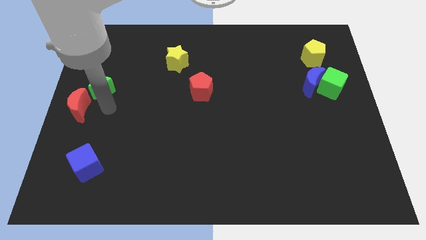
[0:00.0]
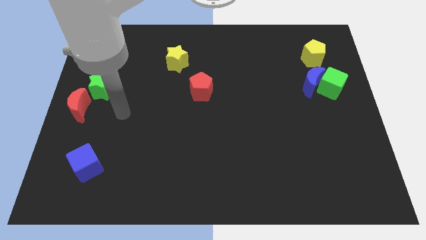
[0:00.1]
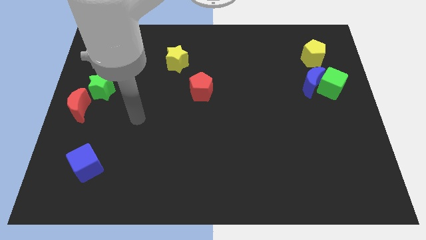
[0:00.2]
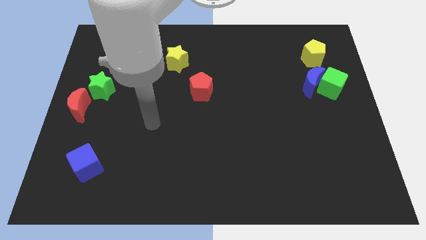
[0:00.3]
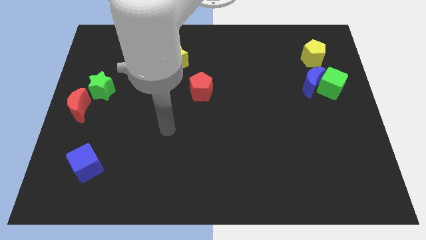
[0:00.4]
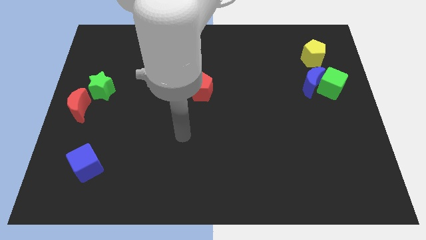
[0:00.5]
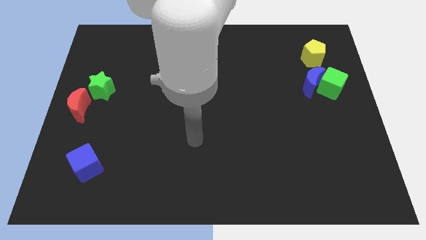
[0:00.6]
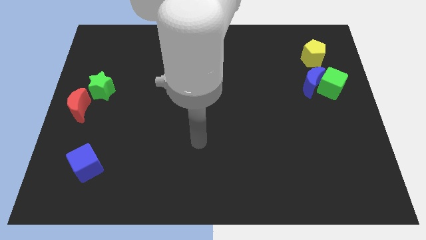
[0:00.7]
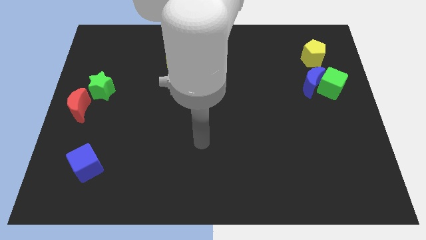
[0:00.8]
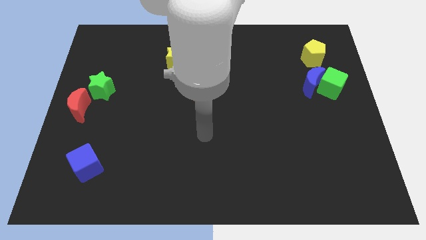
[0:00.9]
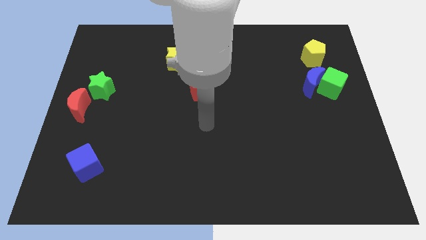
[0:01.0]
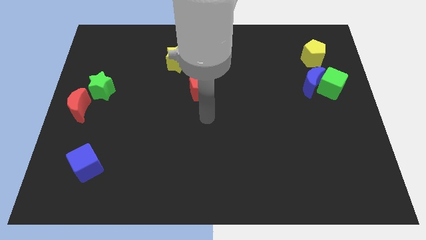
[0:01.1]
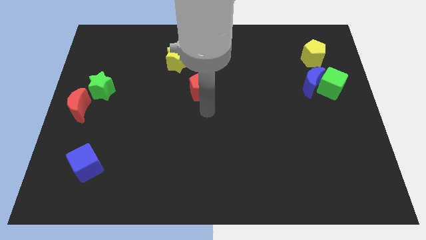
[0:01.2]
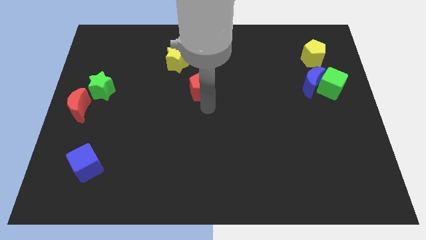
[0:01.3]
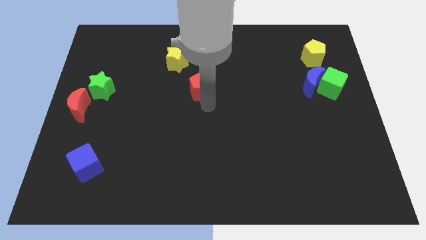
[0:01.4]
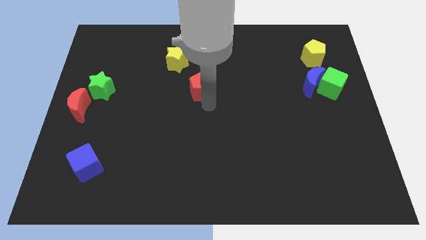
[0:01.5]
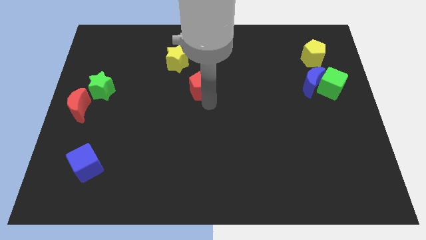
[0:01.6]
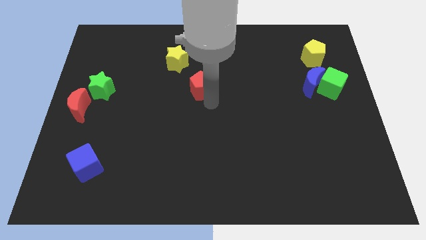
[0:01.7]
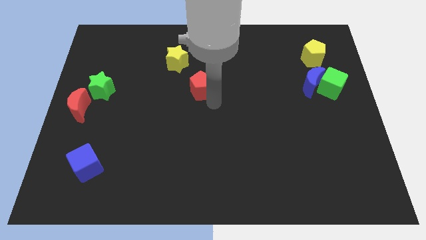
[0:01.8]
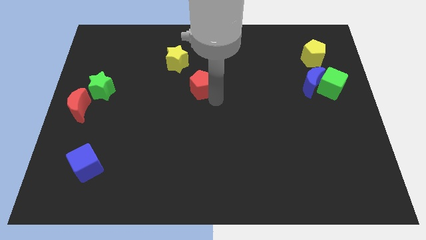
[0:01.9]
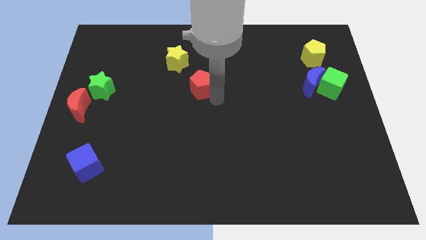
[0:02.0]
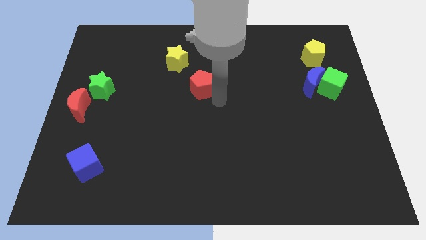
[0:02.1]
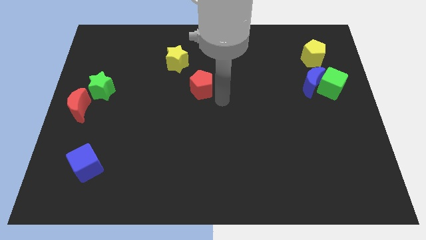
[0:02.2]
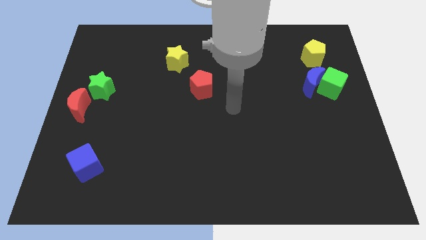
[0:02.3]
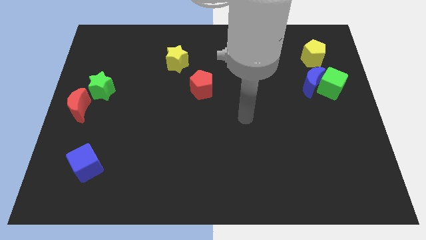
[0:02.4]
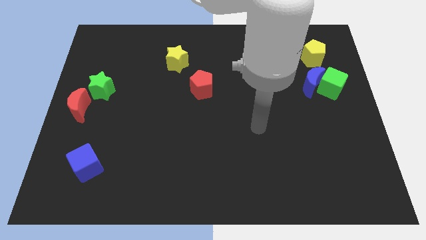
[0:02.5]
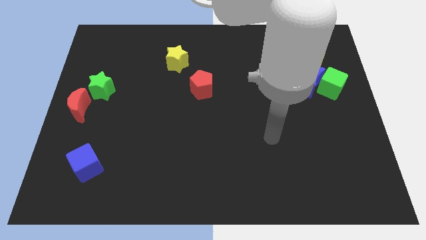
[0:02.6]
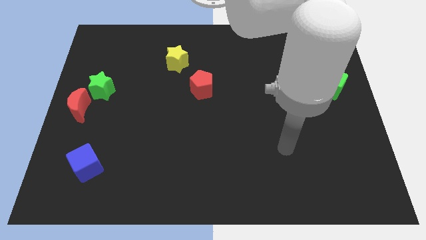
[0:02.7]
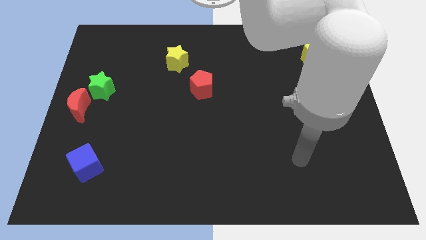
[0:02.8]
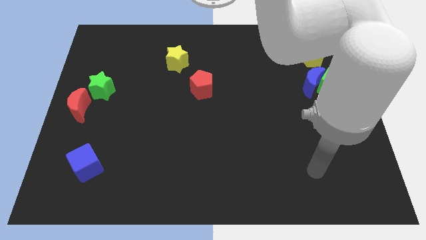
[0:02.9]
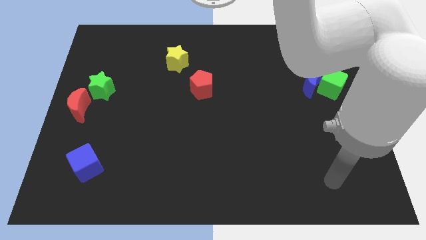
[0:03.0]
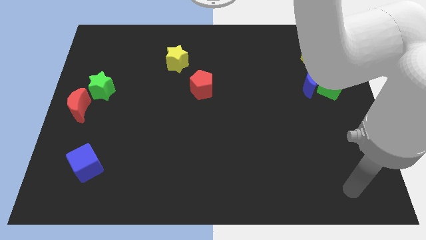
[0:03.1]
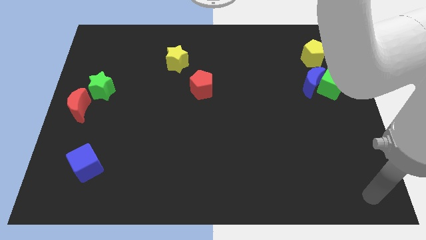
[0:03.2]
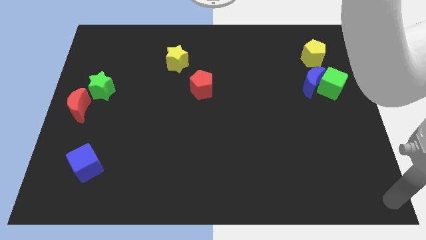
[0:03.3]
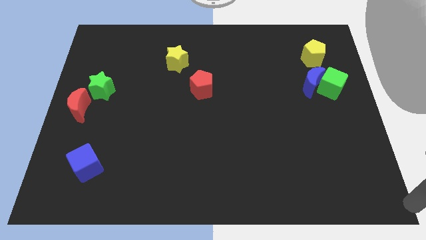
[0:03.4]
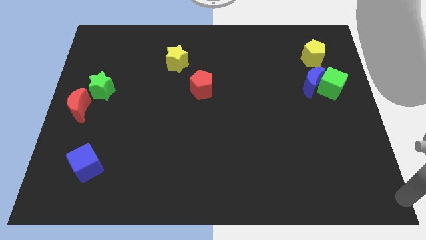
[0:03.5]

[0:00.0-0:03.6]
move your hand to the bottom right corner of the board

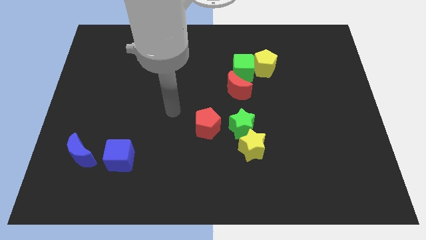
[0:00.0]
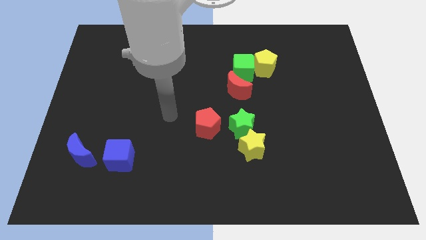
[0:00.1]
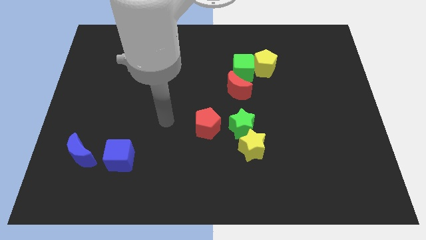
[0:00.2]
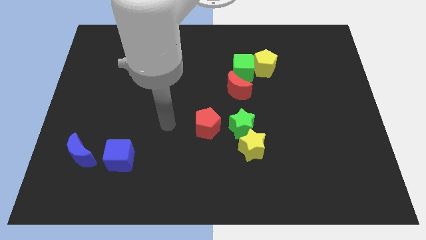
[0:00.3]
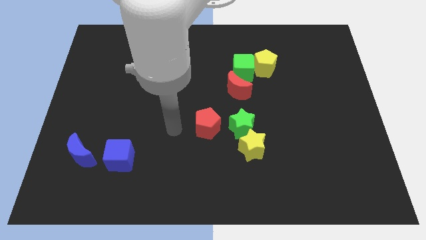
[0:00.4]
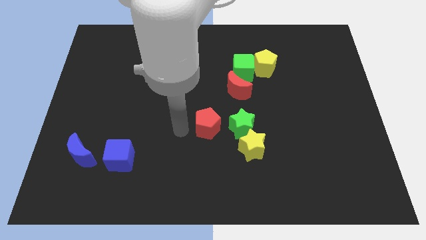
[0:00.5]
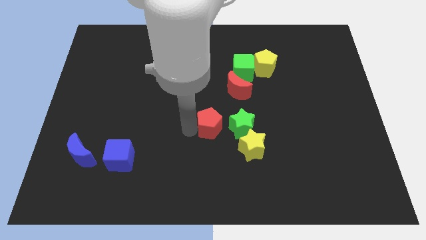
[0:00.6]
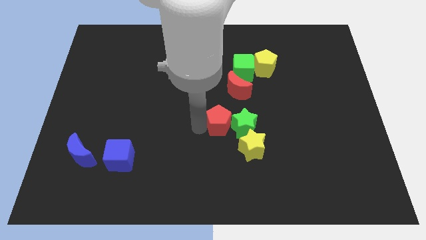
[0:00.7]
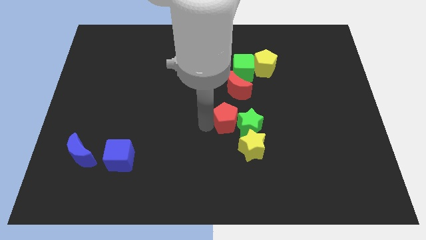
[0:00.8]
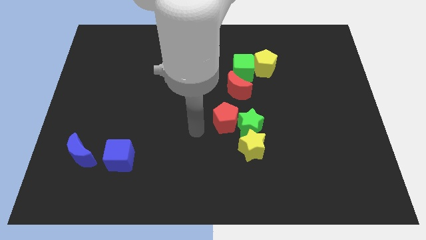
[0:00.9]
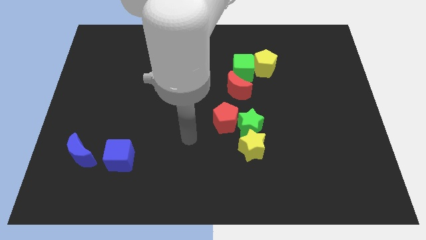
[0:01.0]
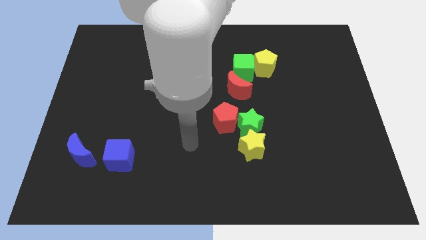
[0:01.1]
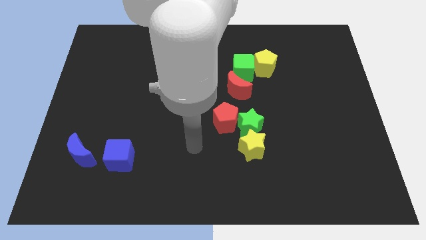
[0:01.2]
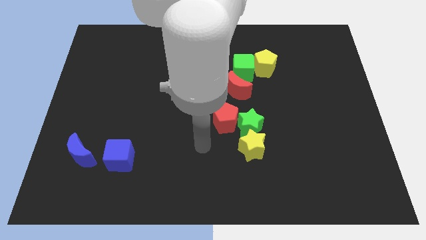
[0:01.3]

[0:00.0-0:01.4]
push the red pentagon into the green star

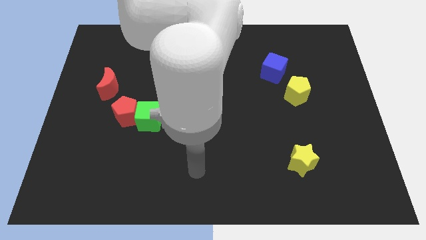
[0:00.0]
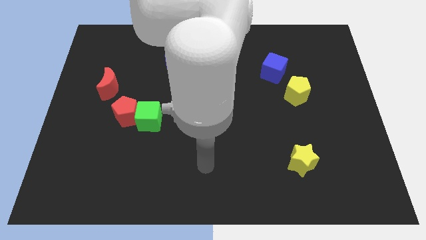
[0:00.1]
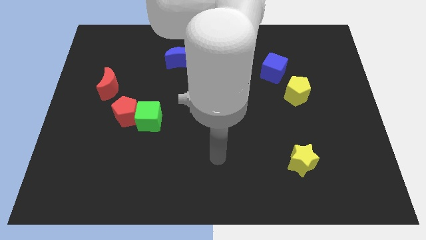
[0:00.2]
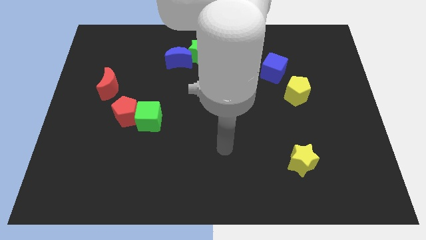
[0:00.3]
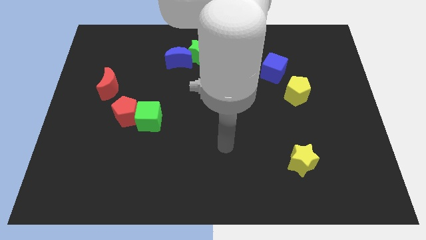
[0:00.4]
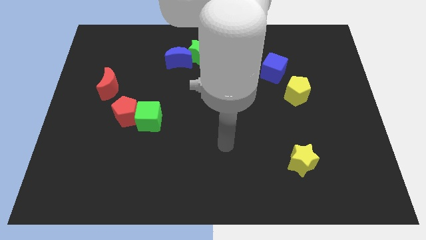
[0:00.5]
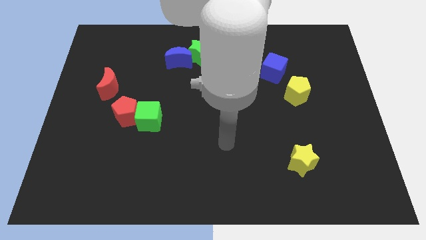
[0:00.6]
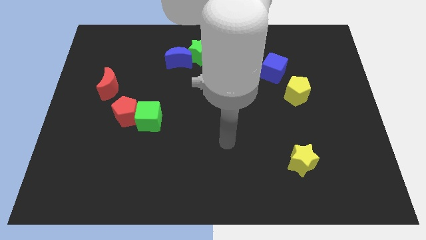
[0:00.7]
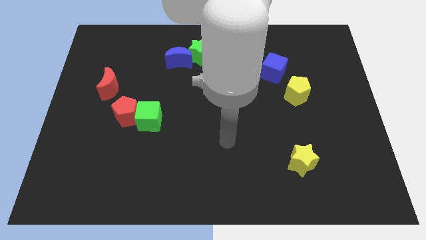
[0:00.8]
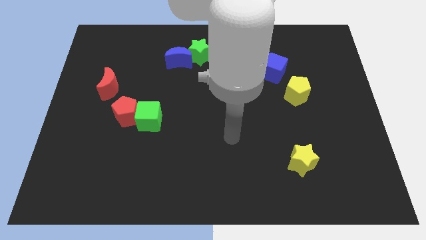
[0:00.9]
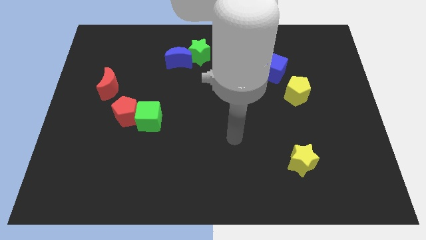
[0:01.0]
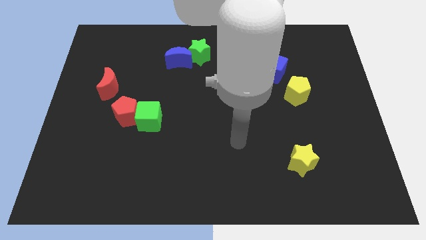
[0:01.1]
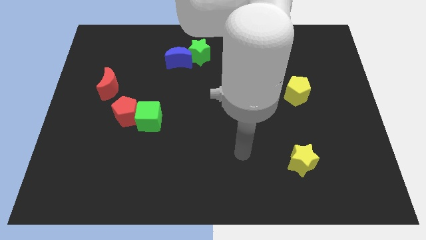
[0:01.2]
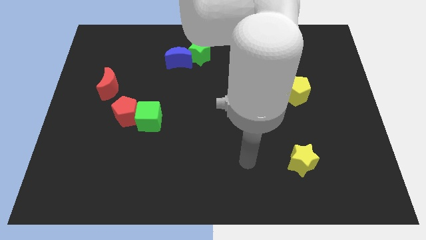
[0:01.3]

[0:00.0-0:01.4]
move your hand to the left side of the yellow star

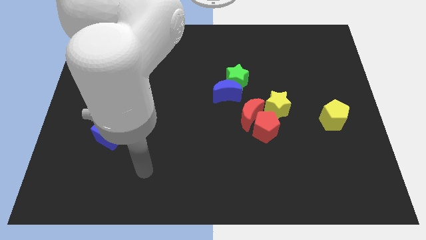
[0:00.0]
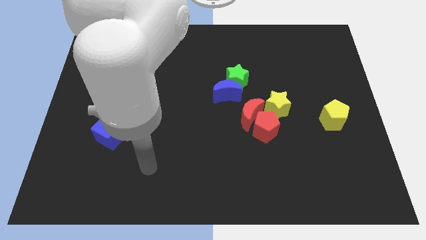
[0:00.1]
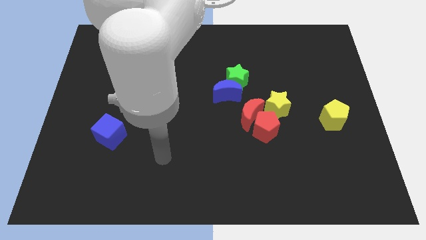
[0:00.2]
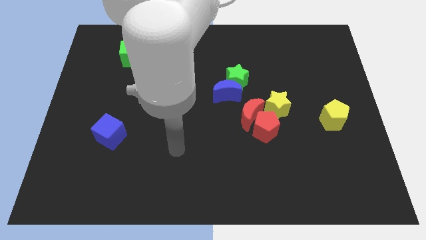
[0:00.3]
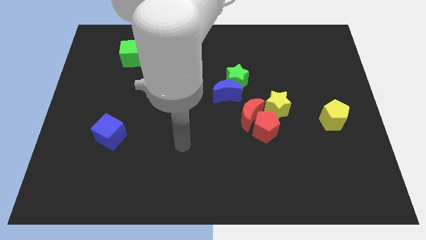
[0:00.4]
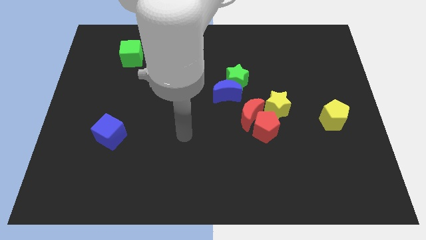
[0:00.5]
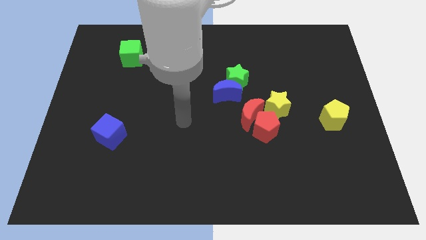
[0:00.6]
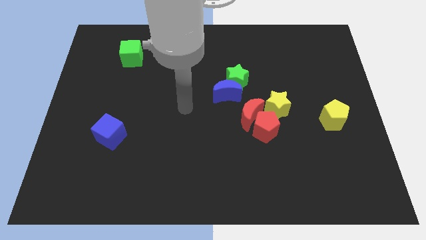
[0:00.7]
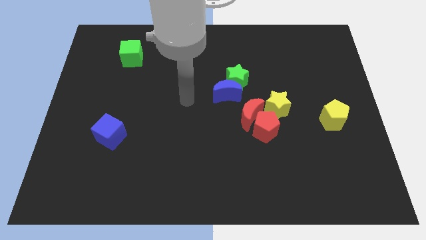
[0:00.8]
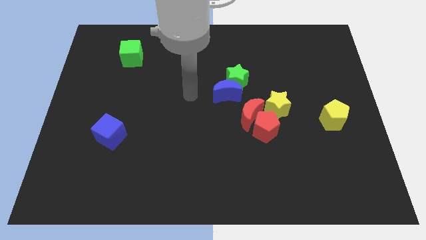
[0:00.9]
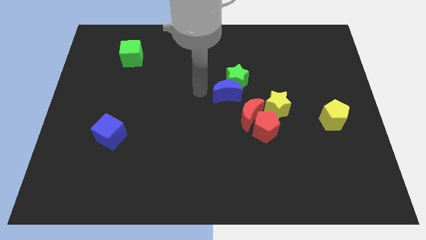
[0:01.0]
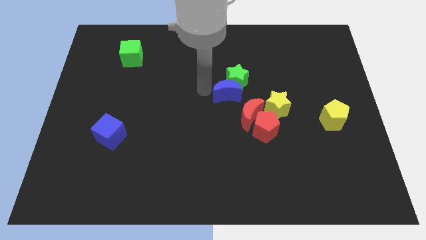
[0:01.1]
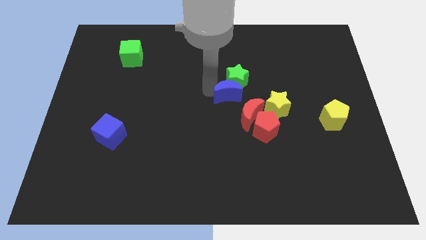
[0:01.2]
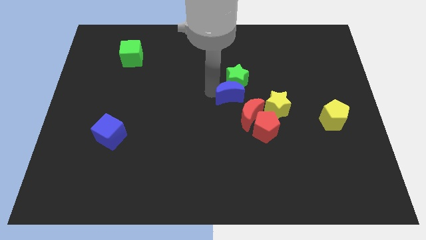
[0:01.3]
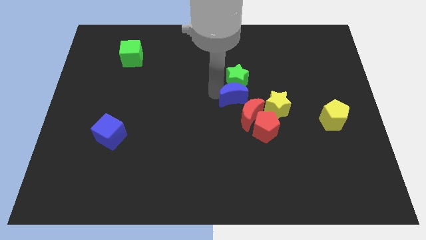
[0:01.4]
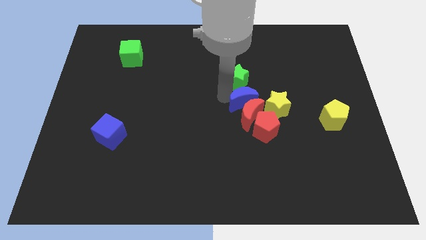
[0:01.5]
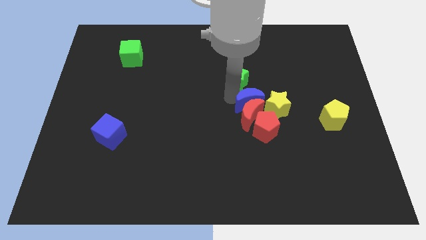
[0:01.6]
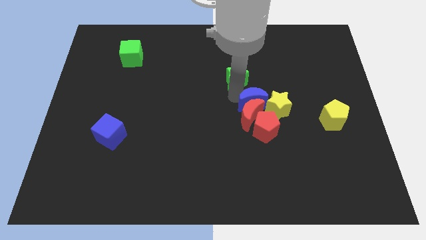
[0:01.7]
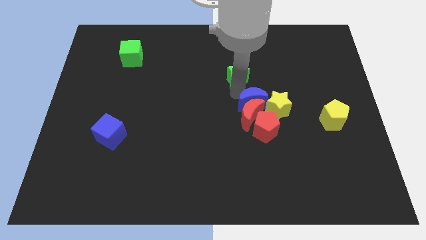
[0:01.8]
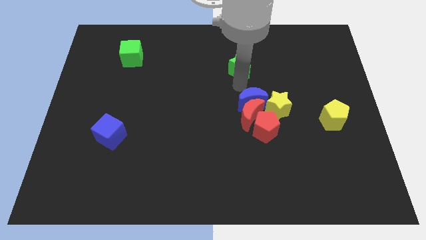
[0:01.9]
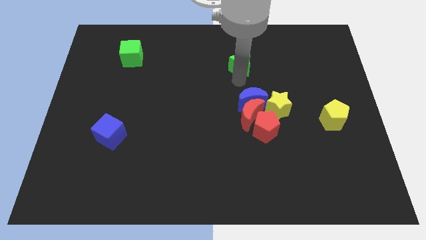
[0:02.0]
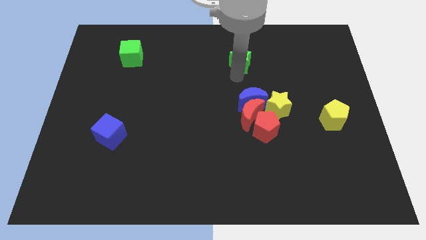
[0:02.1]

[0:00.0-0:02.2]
push the blue moon close to the red moon

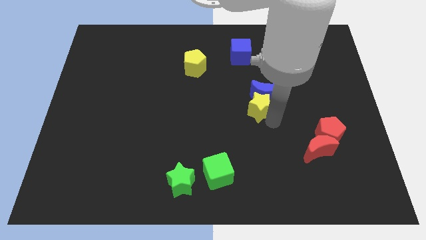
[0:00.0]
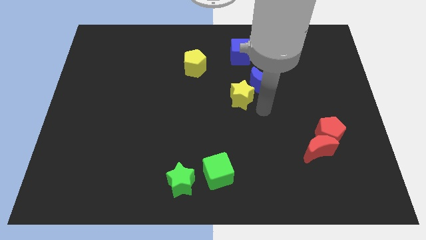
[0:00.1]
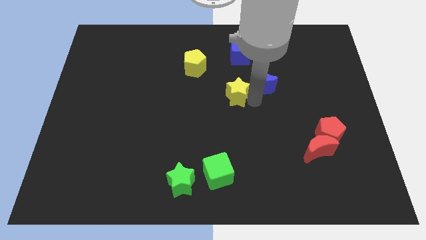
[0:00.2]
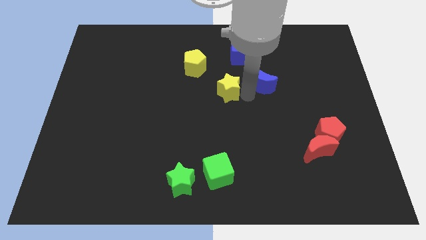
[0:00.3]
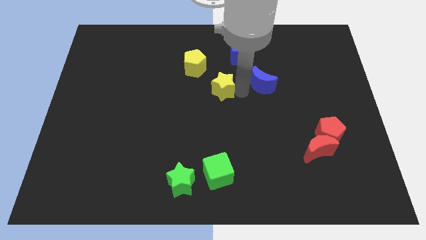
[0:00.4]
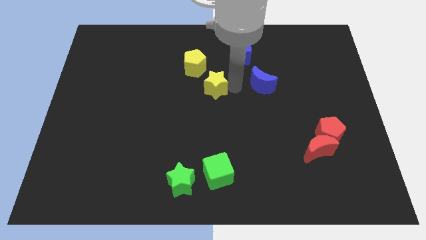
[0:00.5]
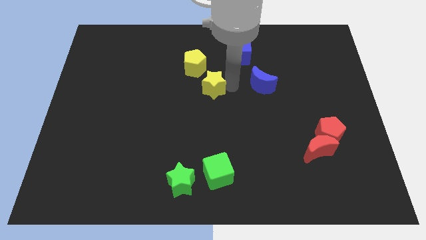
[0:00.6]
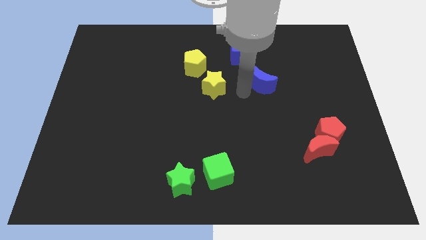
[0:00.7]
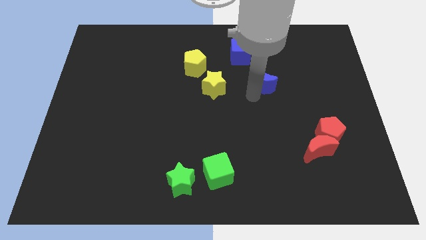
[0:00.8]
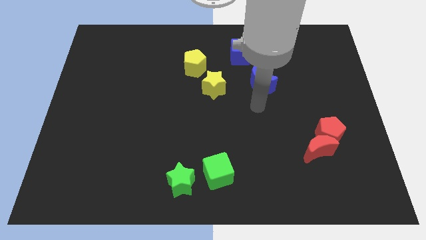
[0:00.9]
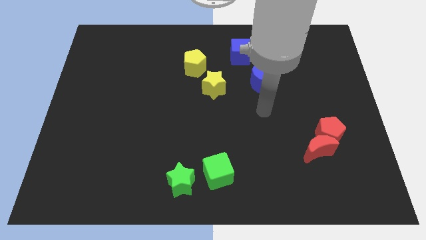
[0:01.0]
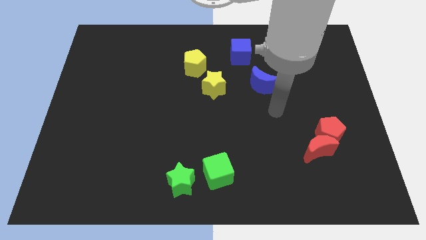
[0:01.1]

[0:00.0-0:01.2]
place the yellow star diagonally to the yellow pentagon
